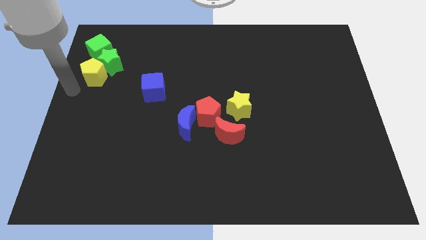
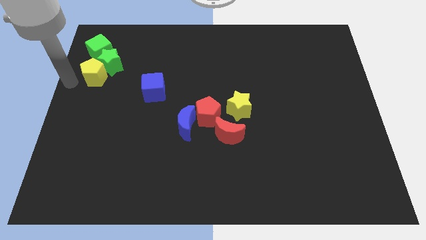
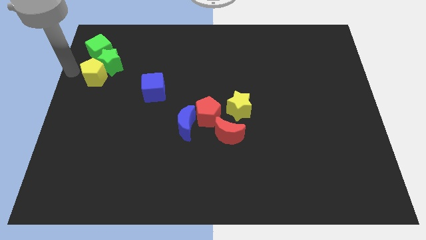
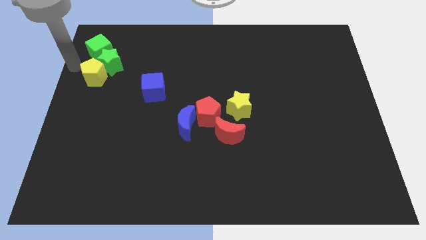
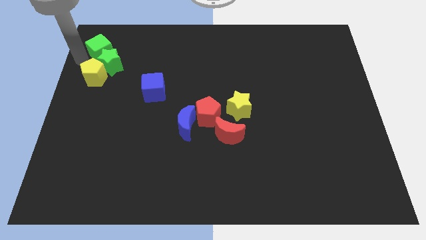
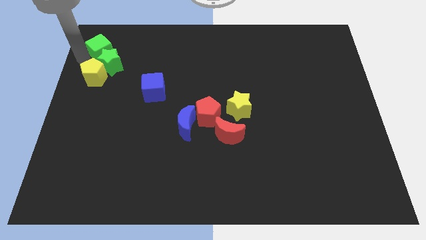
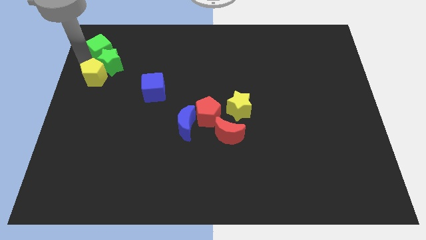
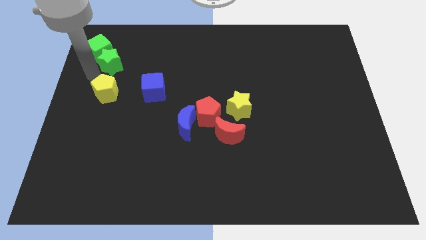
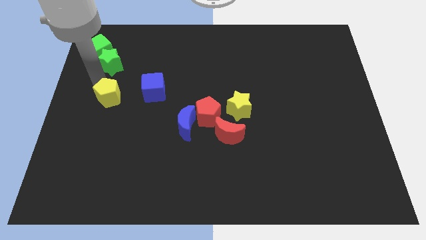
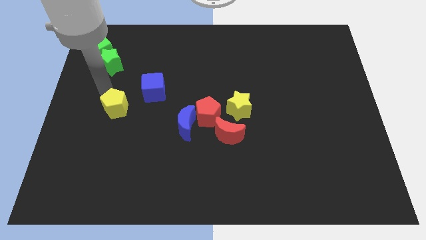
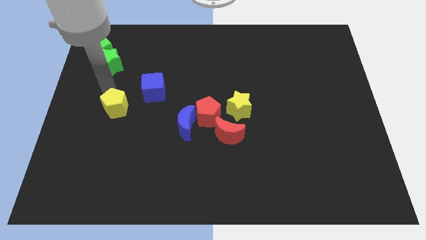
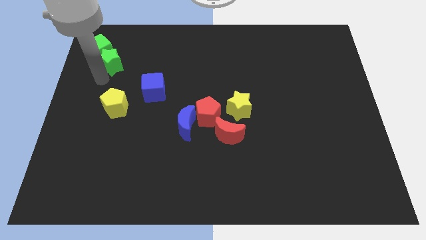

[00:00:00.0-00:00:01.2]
move the yellow pentagon to the left of the blue cube

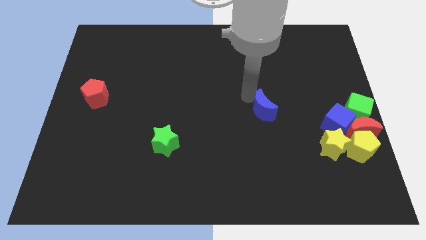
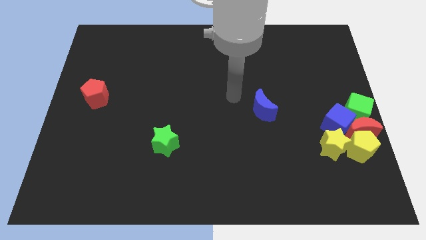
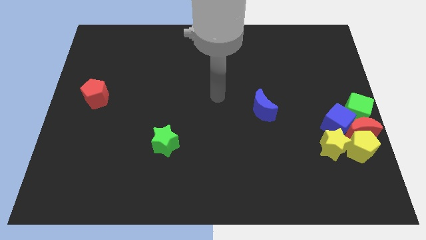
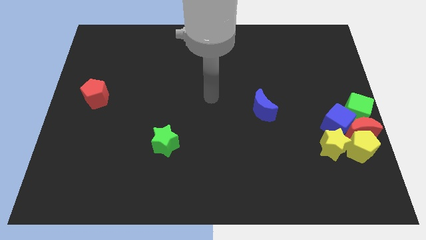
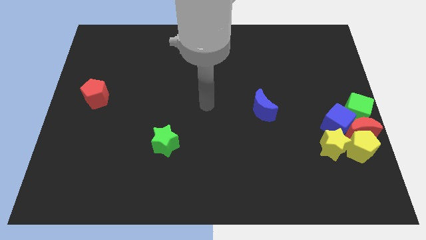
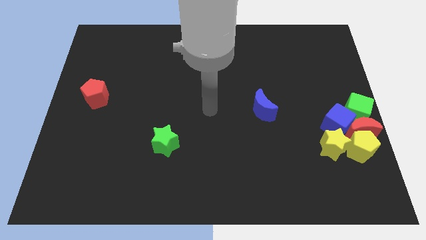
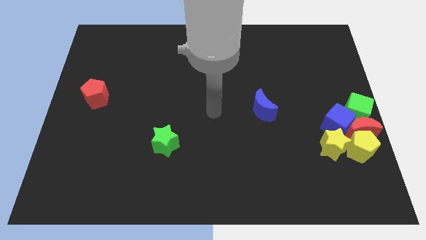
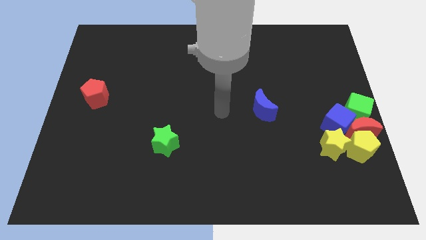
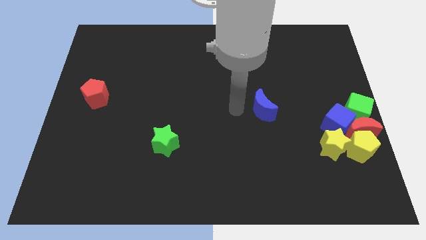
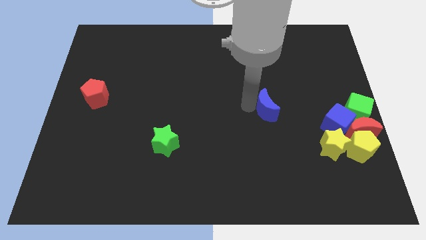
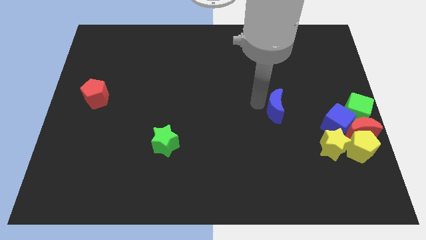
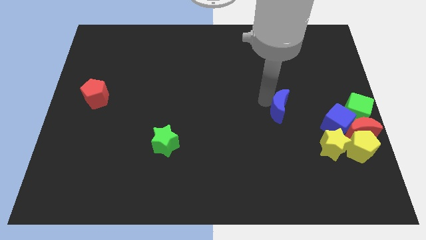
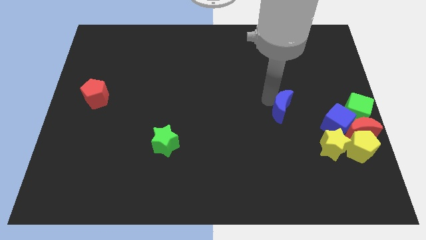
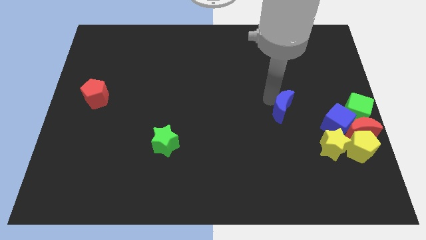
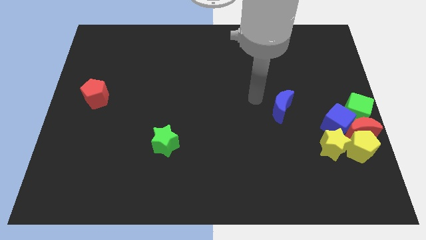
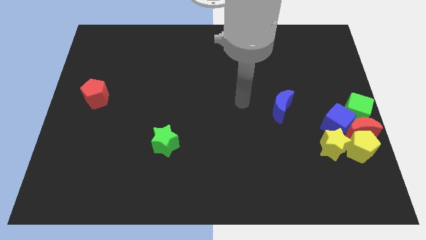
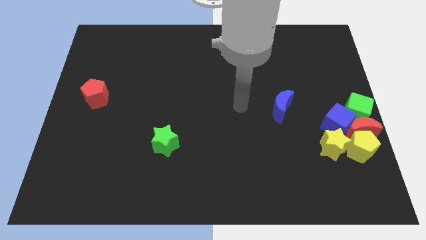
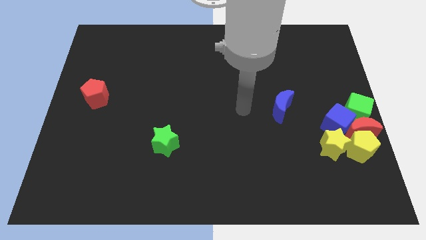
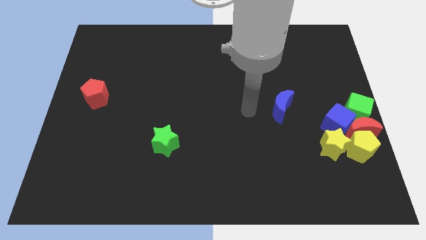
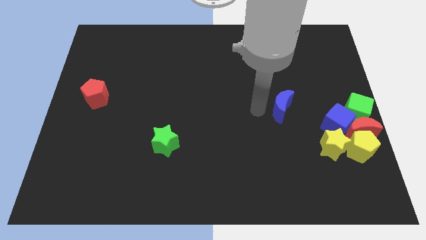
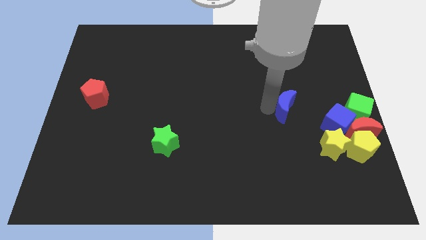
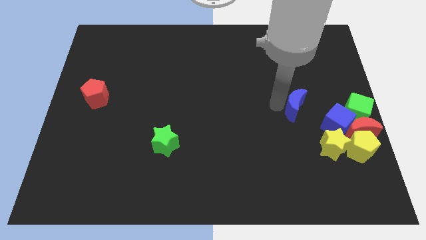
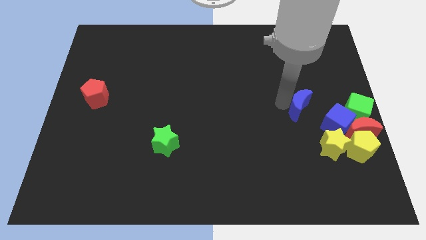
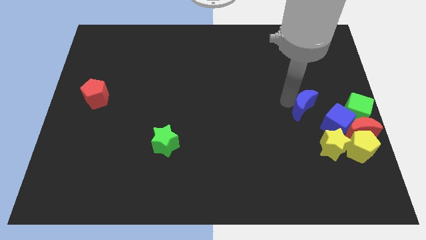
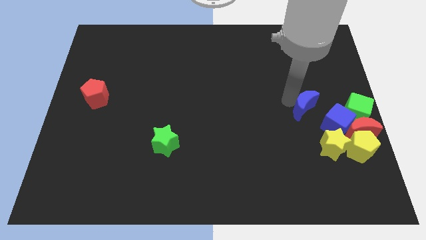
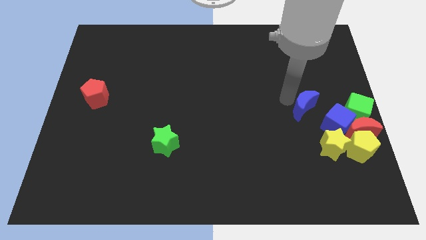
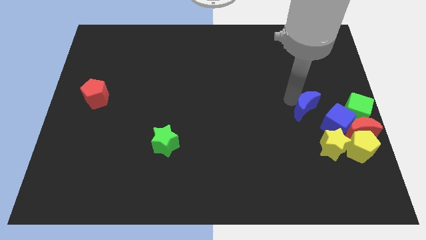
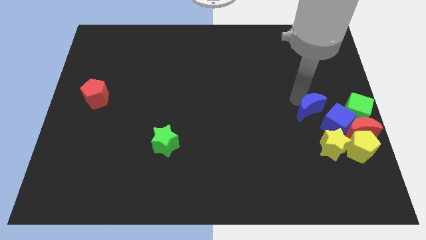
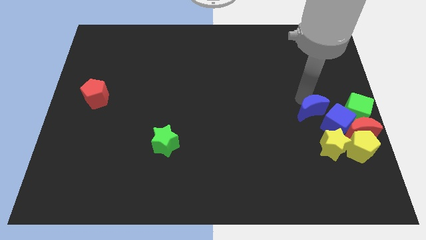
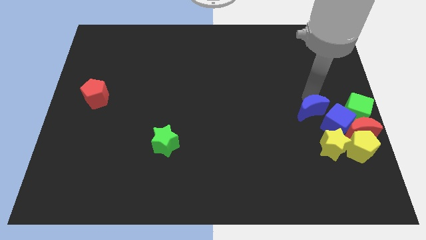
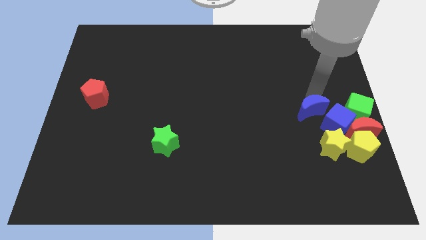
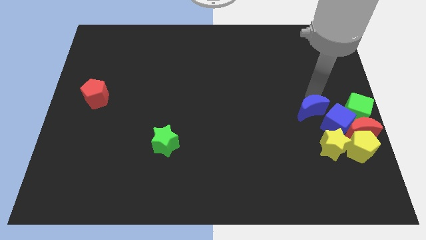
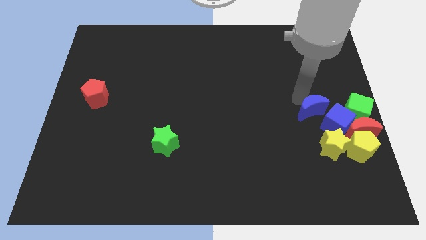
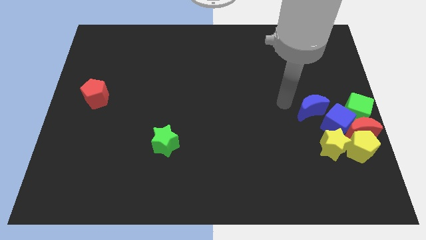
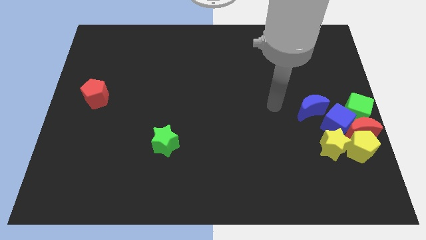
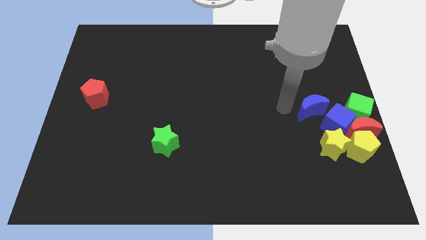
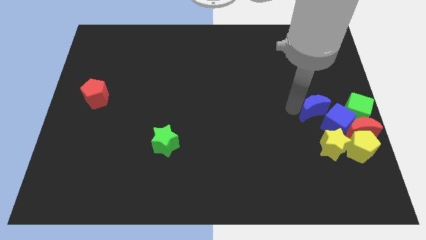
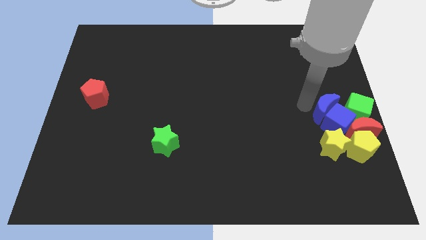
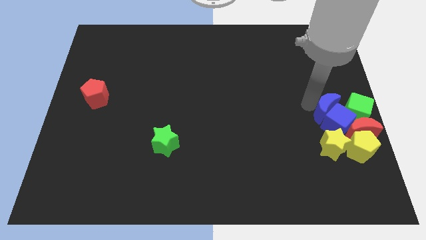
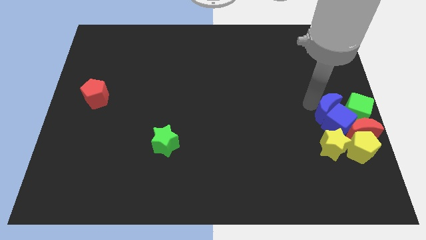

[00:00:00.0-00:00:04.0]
drag the blue moon into the left side of the blue cube

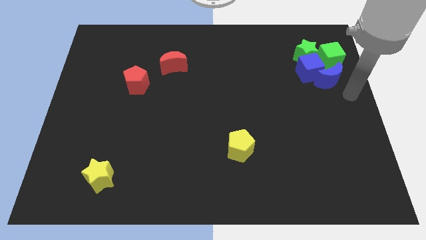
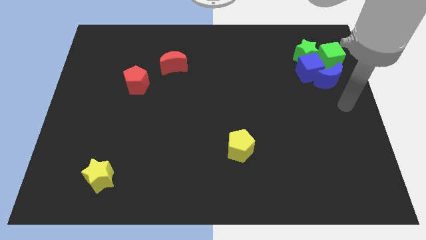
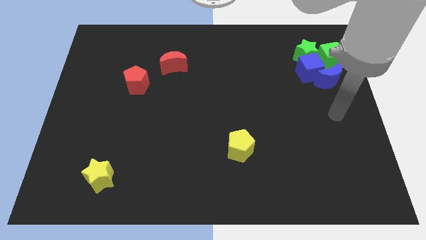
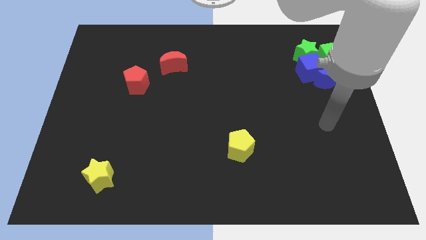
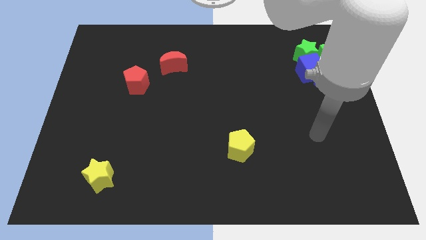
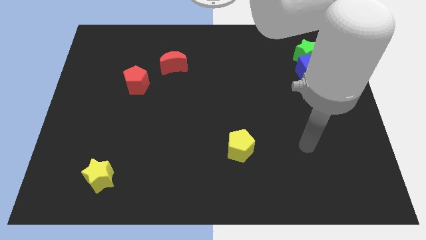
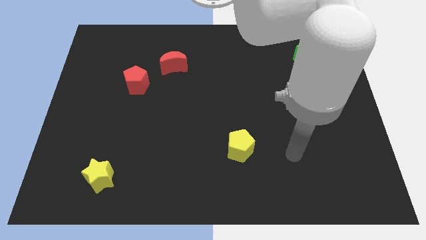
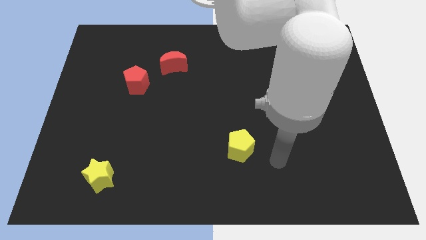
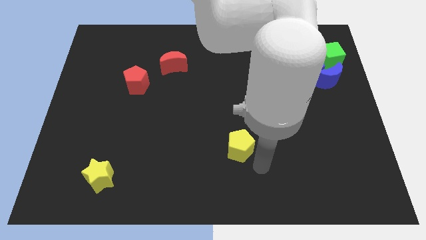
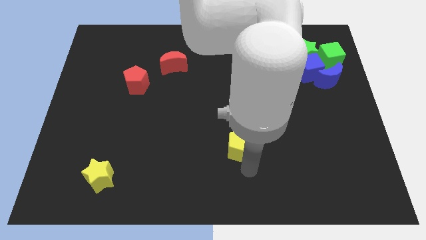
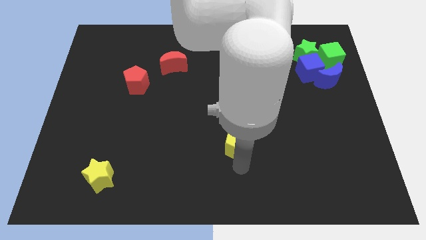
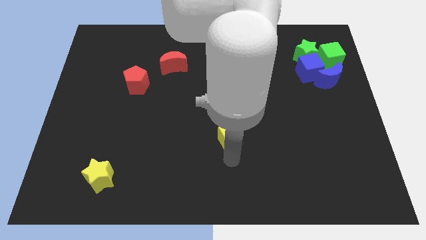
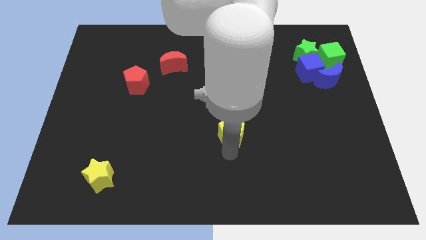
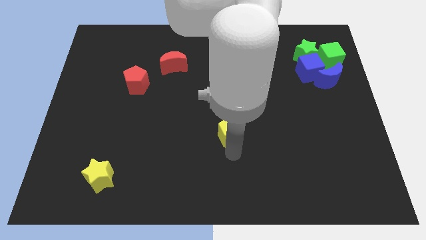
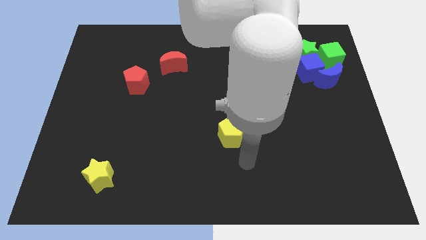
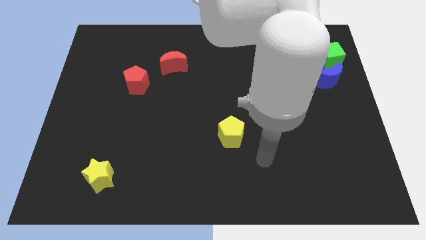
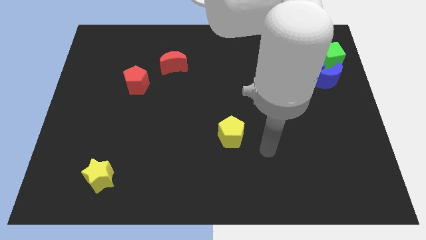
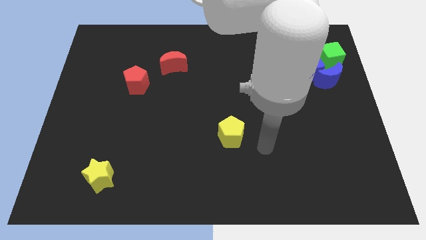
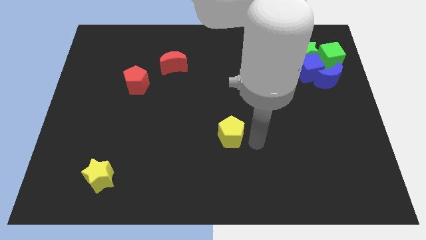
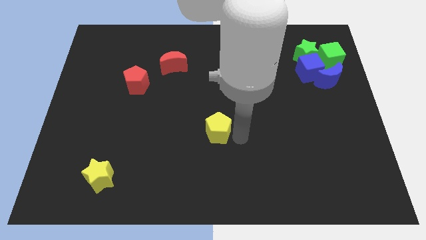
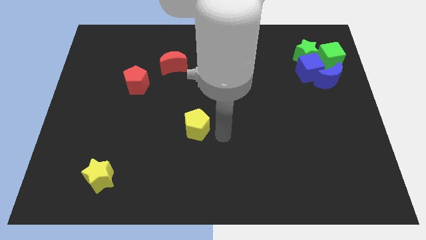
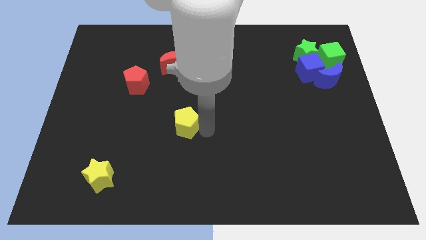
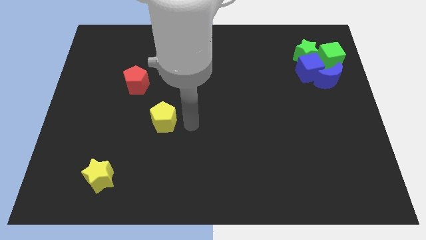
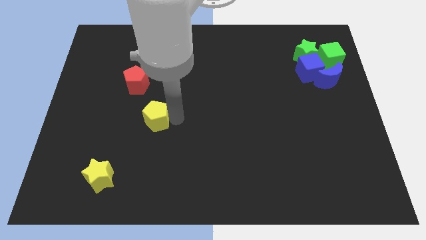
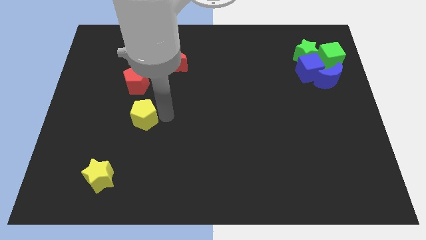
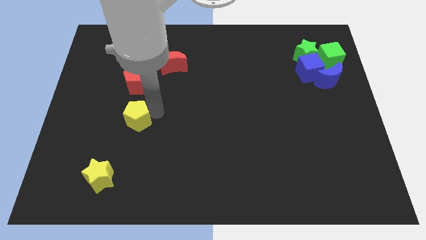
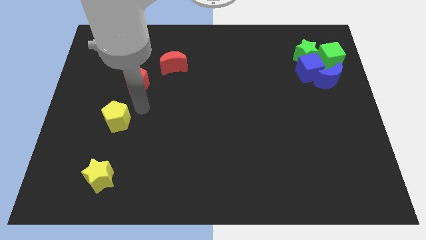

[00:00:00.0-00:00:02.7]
put the yellow pentagon in between the yellow star and red pentagon

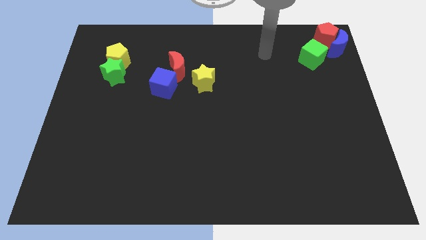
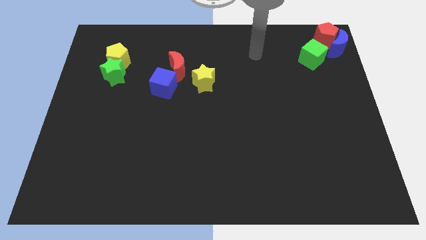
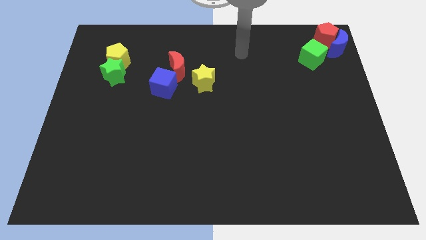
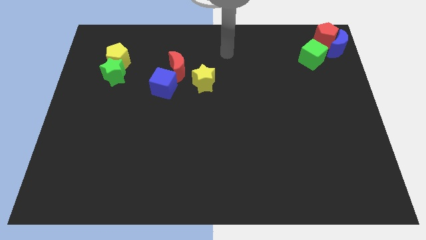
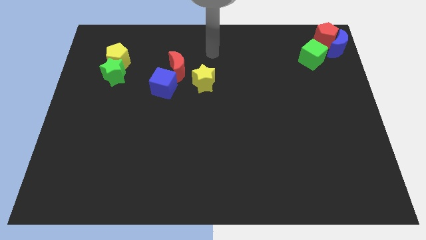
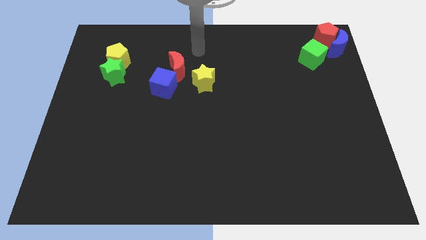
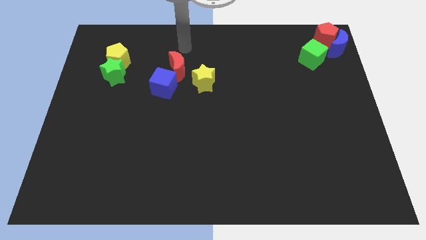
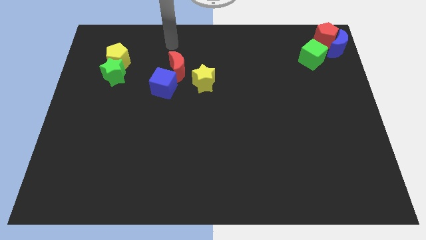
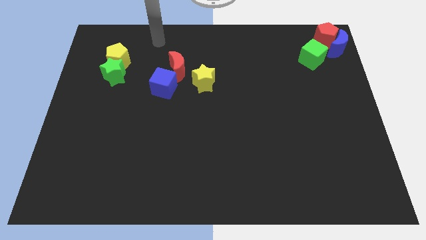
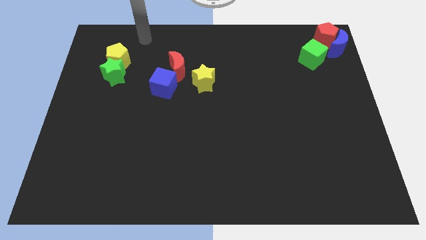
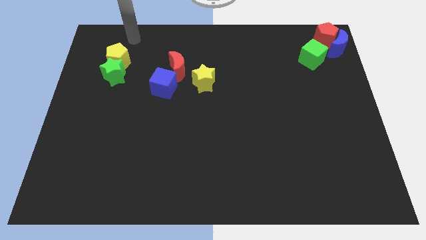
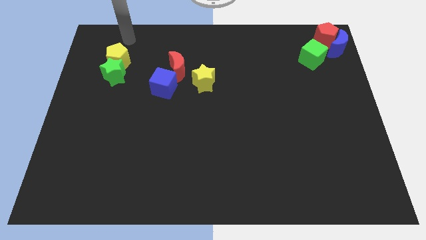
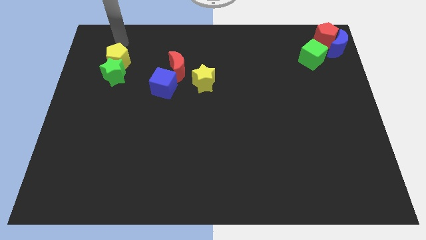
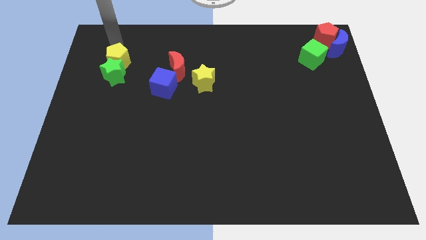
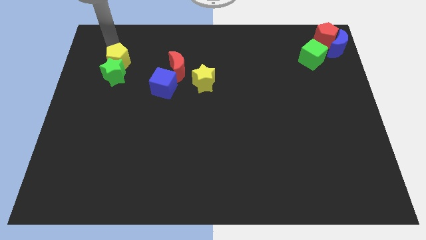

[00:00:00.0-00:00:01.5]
move your arm towards the top left of the board
